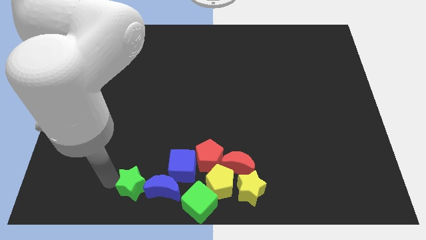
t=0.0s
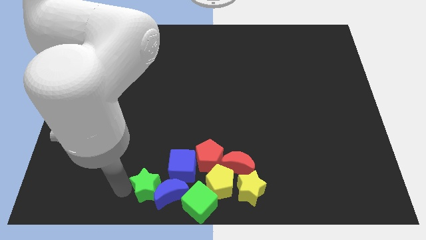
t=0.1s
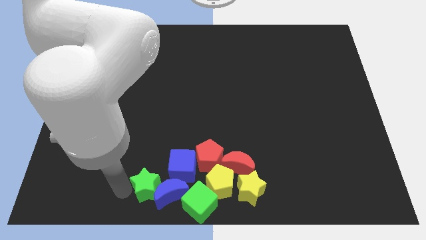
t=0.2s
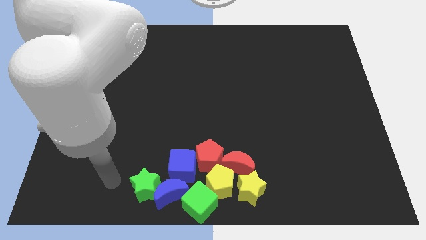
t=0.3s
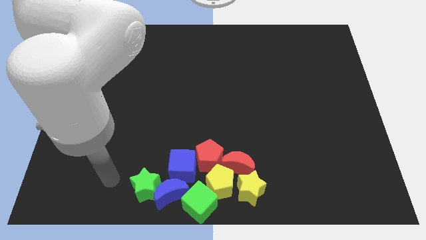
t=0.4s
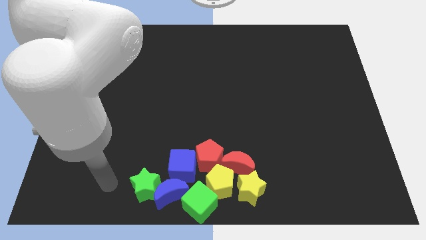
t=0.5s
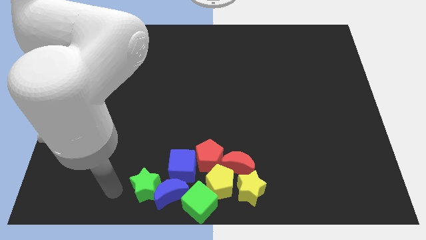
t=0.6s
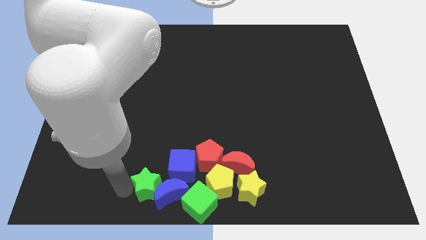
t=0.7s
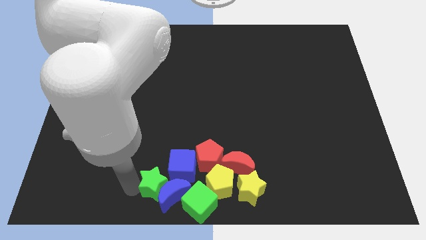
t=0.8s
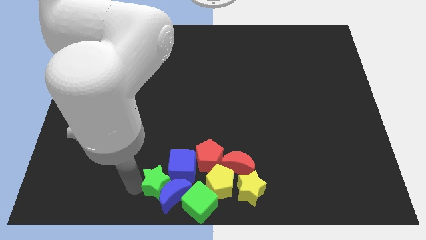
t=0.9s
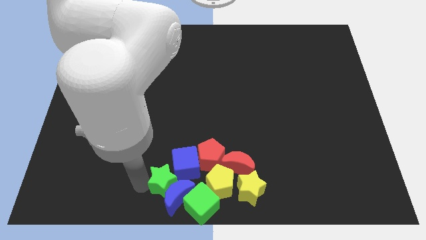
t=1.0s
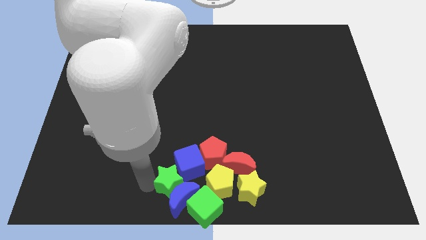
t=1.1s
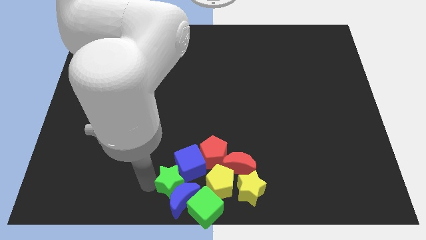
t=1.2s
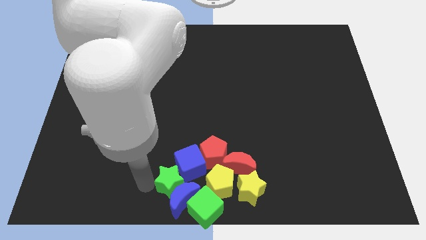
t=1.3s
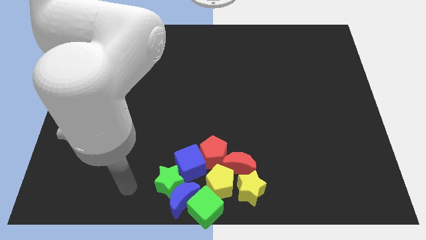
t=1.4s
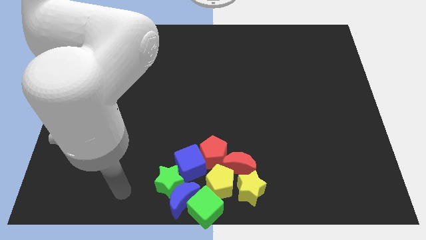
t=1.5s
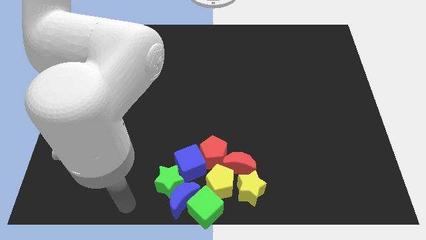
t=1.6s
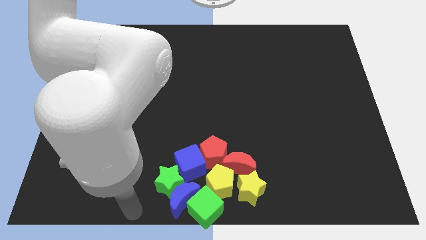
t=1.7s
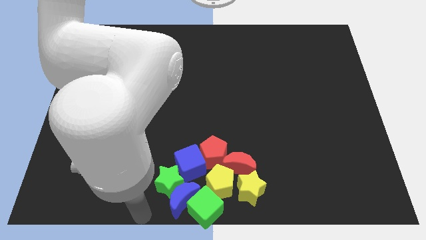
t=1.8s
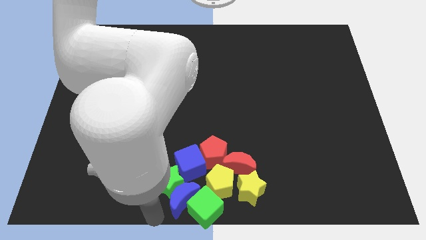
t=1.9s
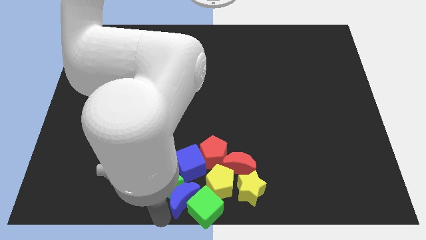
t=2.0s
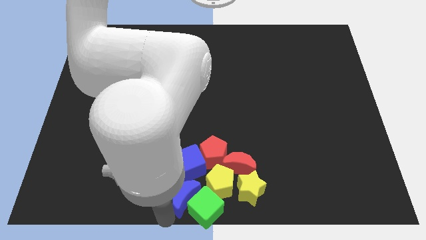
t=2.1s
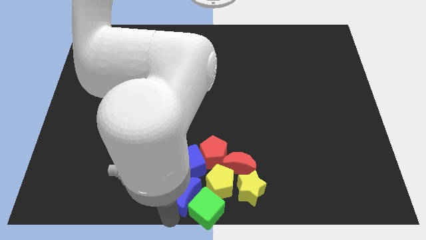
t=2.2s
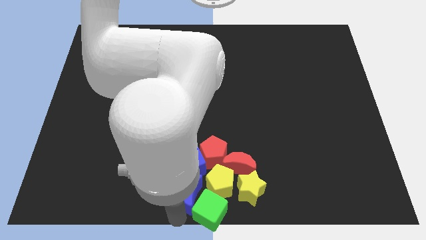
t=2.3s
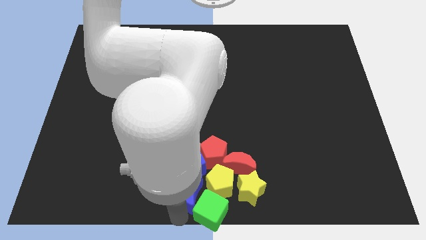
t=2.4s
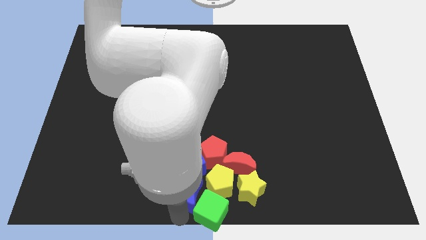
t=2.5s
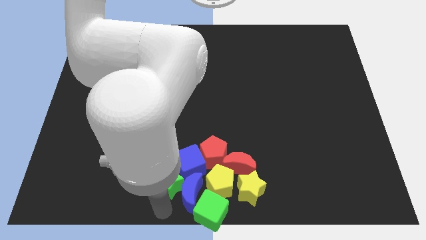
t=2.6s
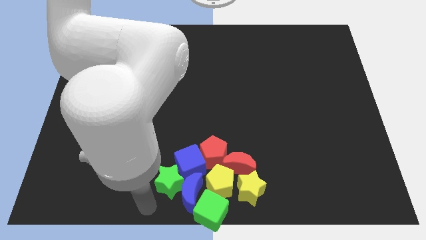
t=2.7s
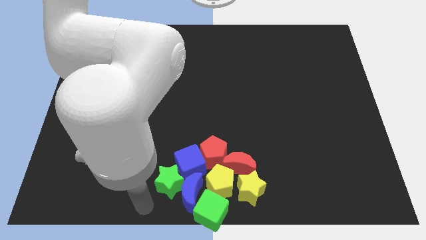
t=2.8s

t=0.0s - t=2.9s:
collect all the blocks at the bottom center of the board

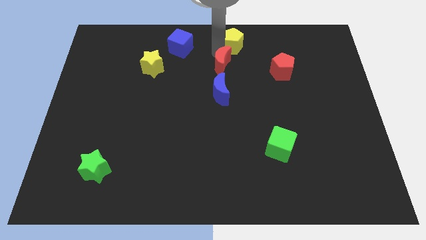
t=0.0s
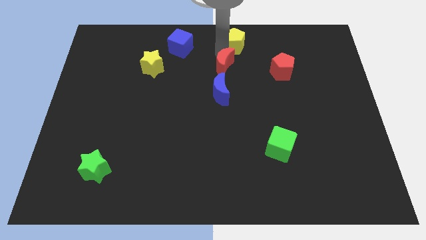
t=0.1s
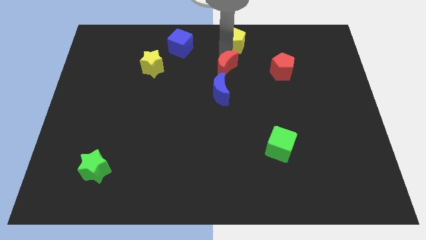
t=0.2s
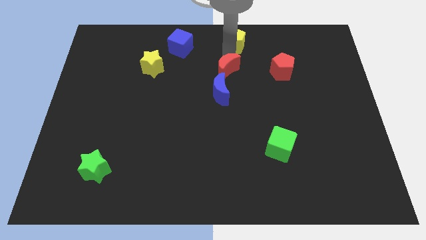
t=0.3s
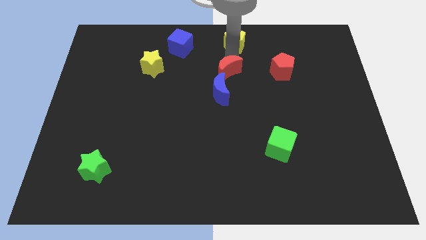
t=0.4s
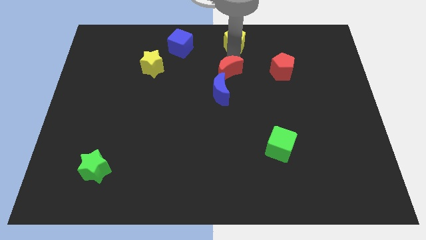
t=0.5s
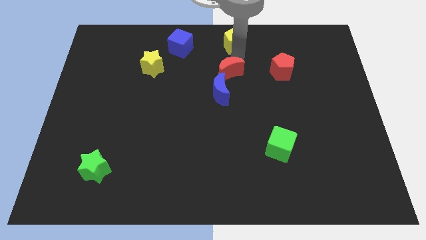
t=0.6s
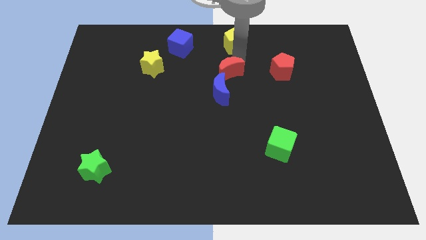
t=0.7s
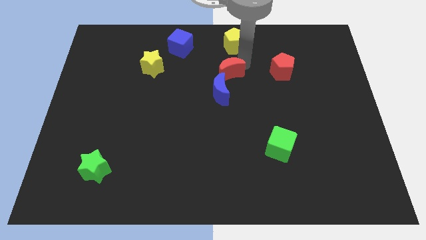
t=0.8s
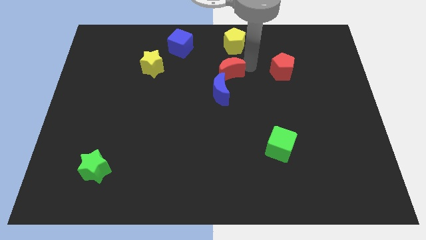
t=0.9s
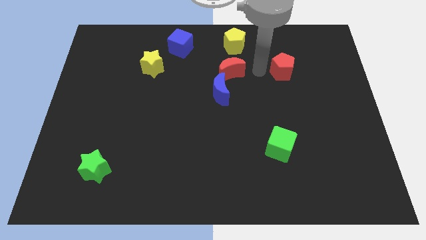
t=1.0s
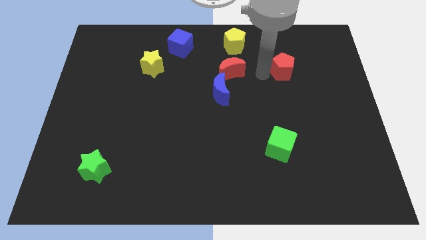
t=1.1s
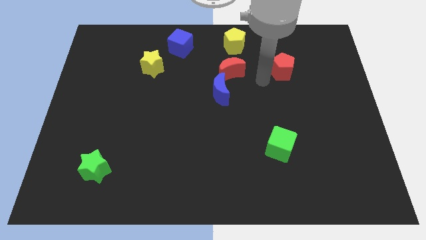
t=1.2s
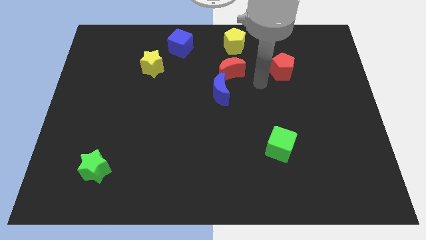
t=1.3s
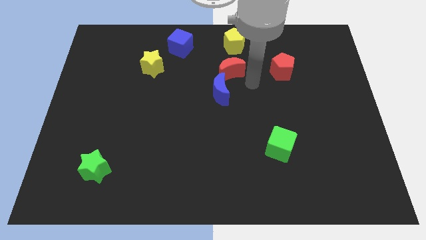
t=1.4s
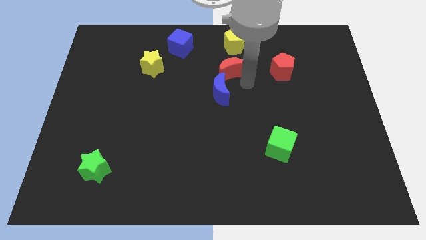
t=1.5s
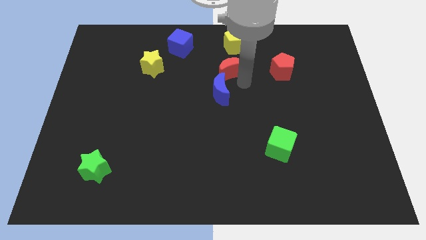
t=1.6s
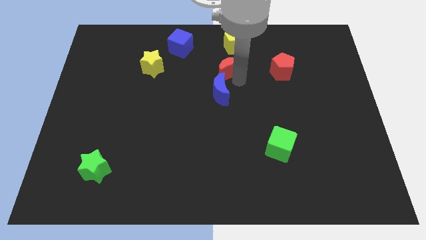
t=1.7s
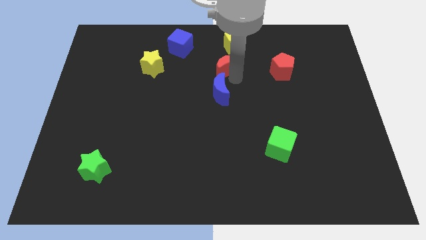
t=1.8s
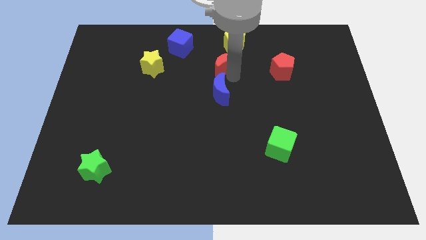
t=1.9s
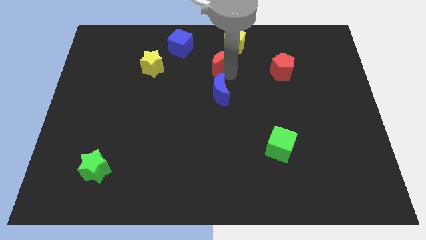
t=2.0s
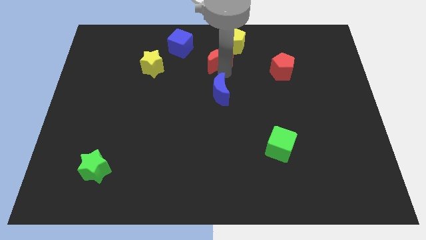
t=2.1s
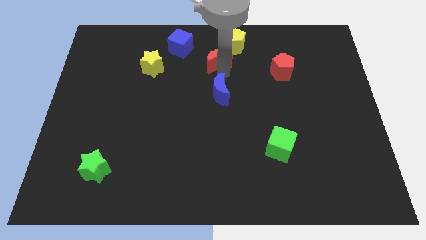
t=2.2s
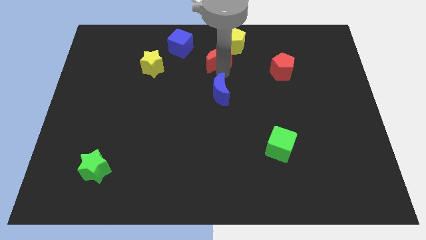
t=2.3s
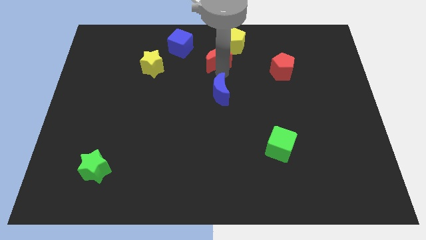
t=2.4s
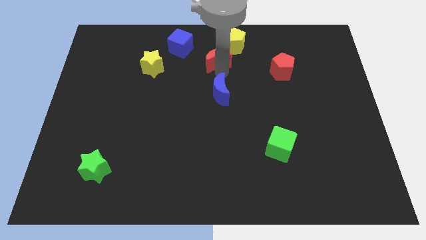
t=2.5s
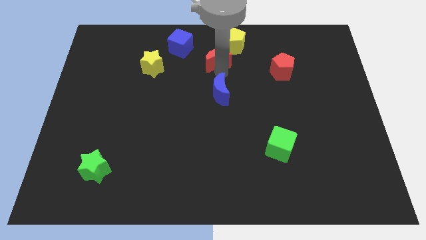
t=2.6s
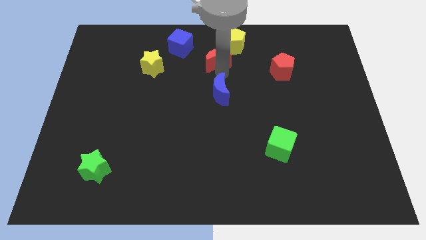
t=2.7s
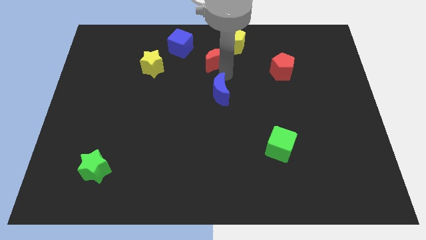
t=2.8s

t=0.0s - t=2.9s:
push red crescent slightly towards up

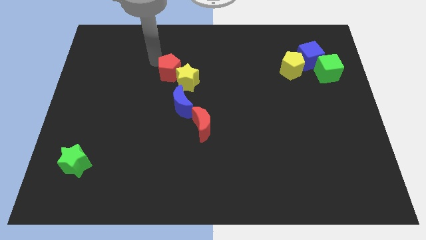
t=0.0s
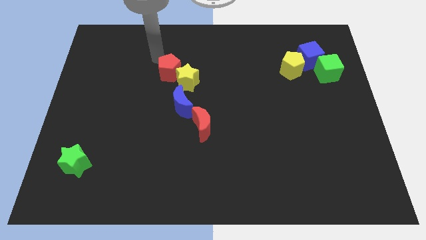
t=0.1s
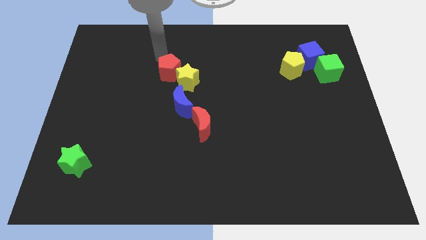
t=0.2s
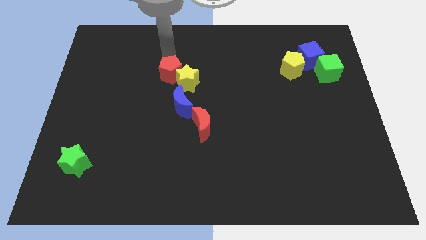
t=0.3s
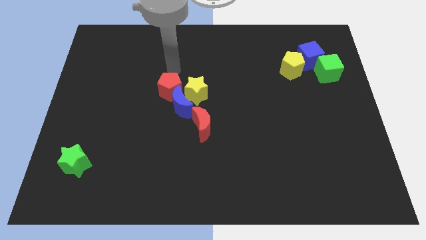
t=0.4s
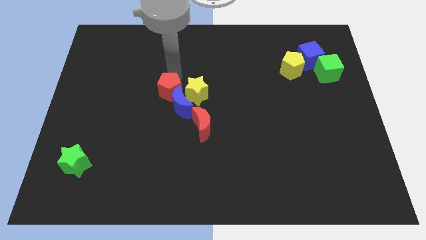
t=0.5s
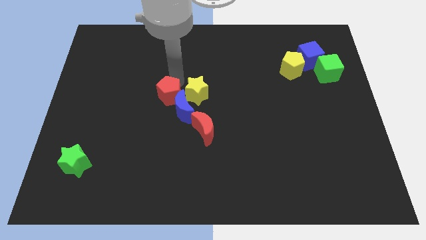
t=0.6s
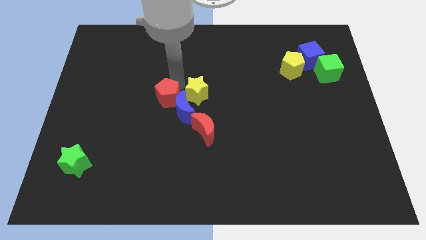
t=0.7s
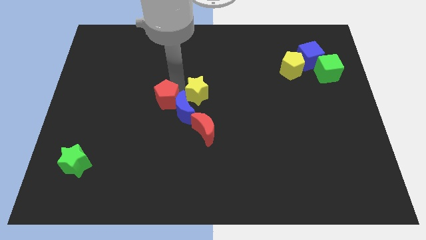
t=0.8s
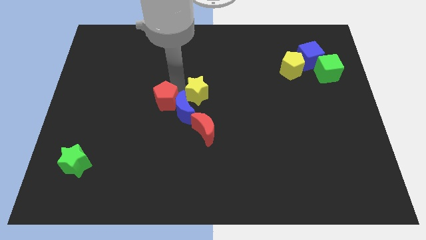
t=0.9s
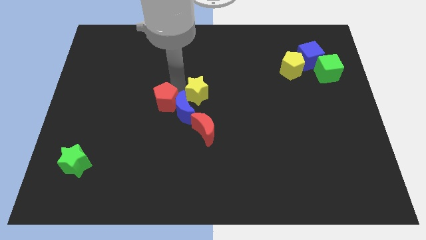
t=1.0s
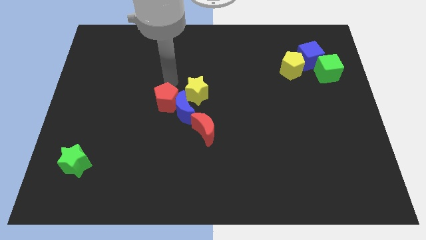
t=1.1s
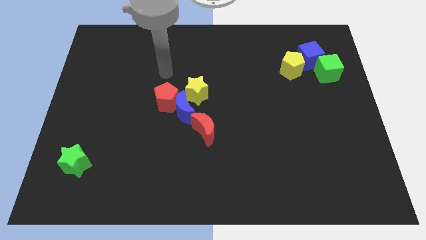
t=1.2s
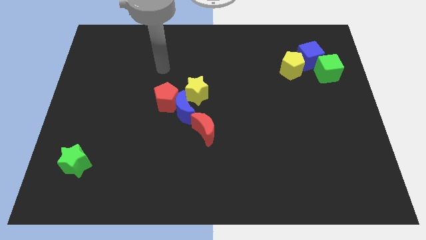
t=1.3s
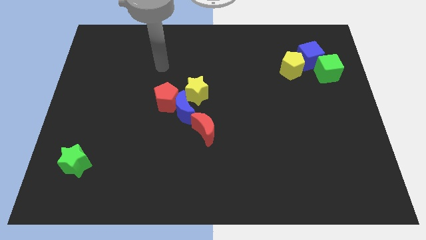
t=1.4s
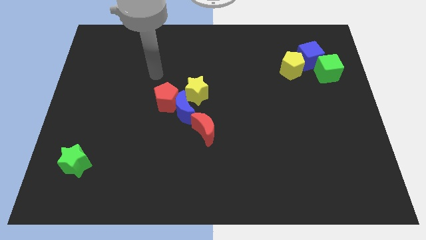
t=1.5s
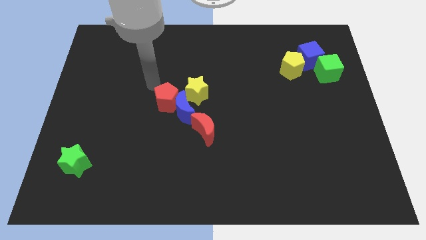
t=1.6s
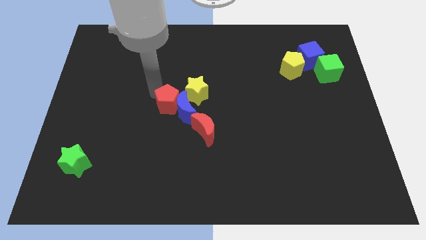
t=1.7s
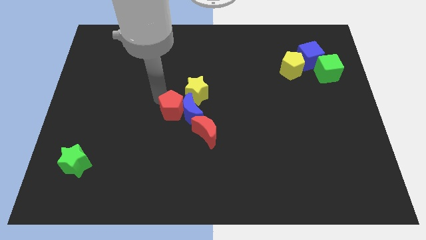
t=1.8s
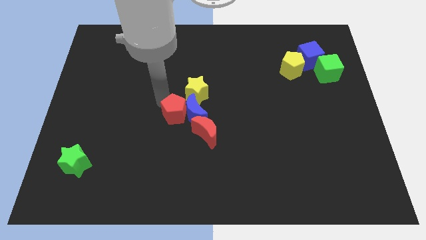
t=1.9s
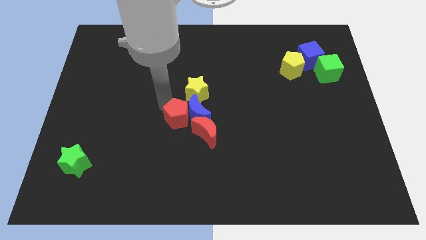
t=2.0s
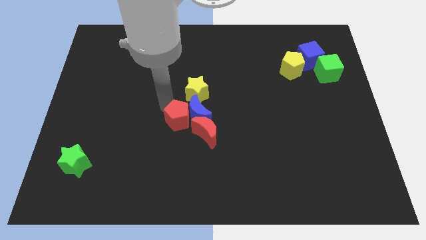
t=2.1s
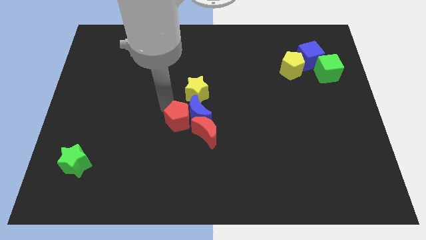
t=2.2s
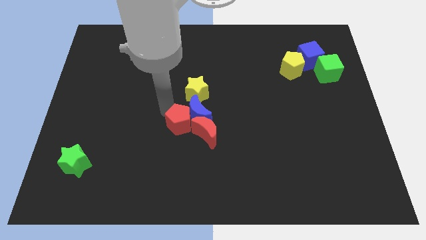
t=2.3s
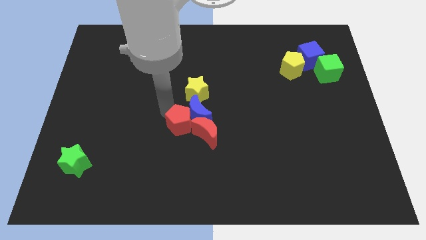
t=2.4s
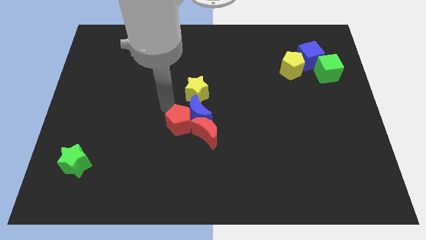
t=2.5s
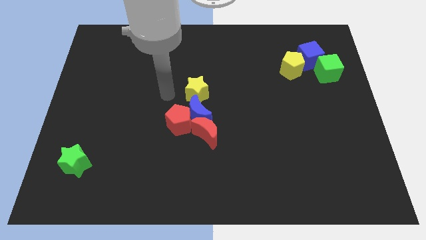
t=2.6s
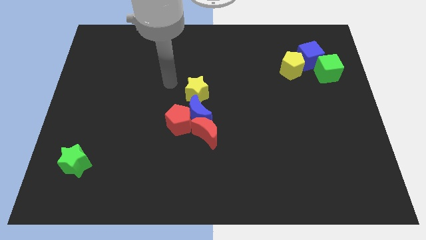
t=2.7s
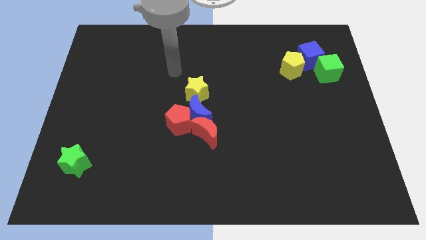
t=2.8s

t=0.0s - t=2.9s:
group up the red blocksyellow pentagon and blue crescent at center of the board

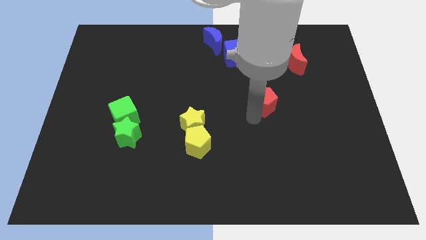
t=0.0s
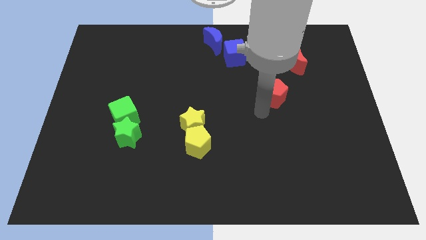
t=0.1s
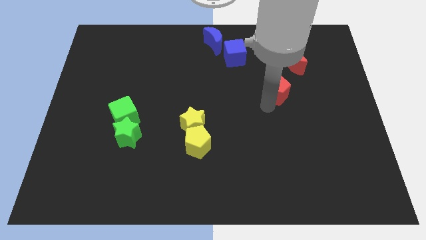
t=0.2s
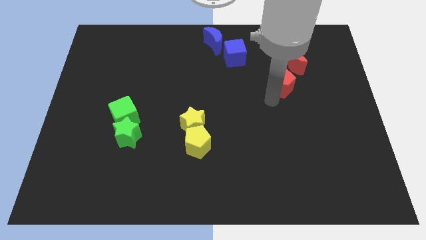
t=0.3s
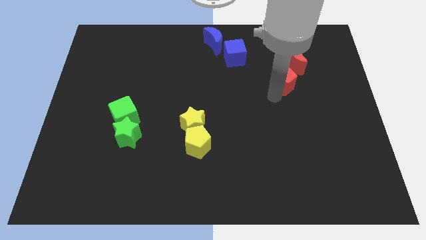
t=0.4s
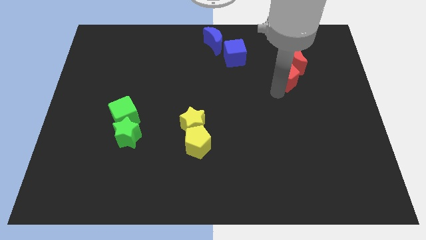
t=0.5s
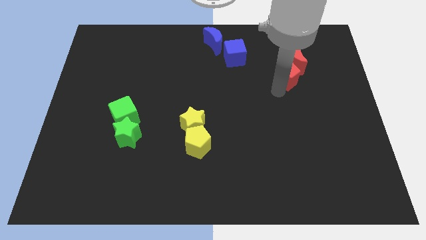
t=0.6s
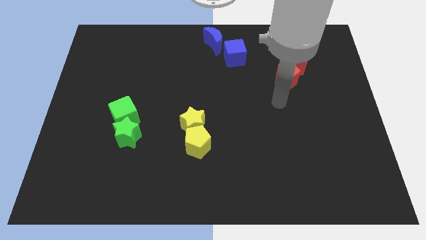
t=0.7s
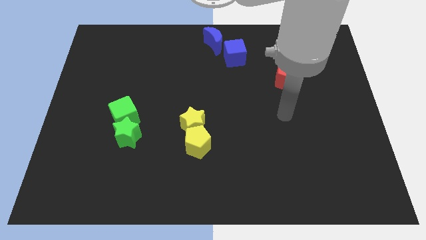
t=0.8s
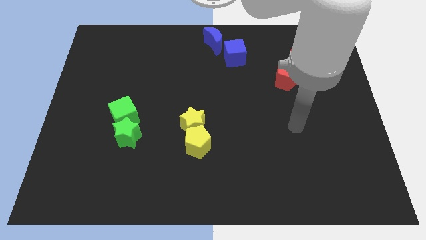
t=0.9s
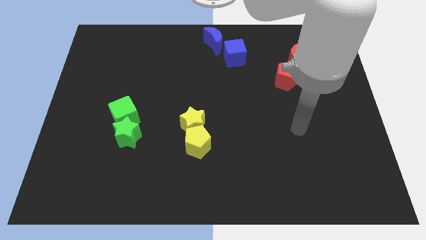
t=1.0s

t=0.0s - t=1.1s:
push the red pentagon into the red crescent
